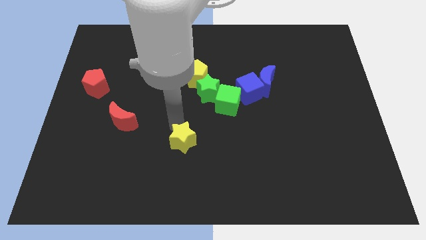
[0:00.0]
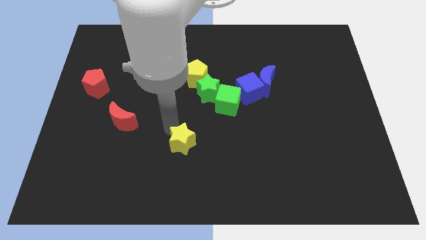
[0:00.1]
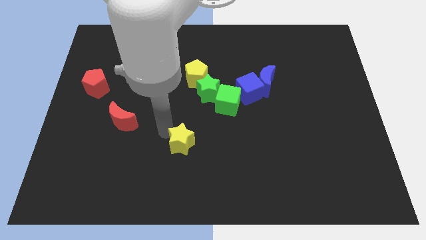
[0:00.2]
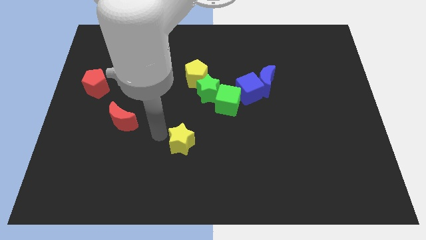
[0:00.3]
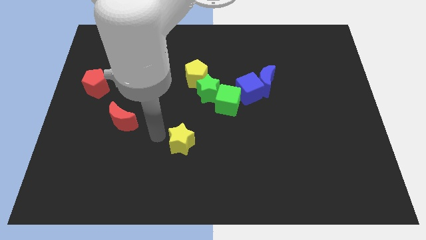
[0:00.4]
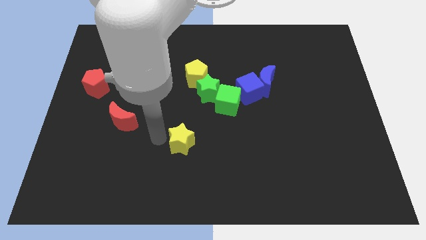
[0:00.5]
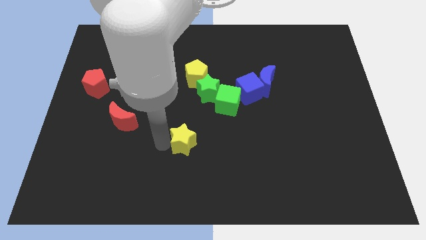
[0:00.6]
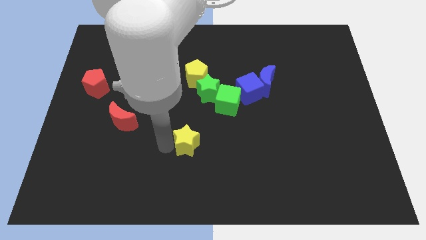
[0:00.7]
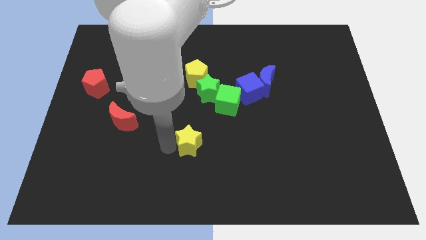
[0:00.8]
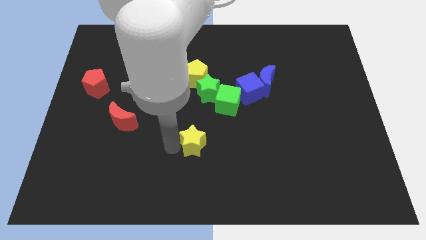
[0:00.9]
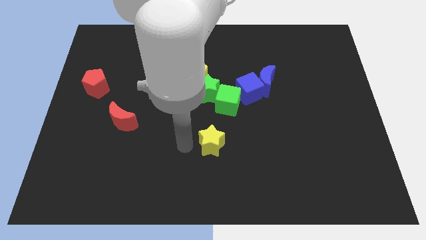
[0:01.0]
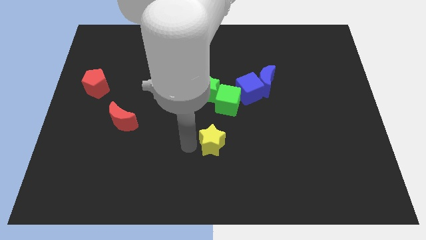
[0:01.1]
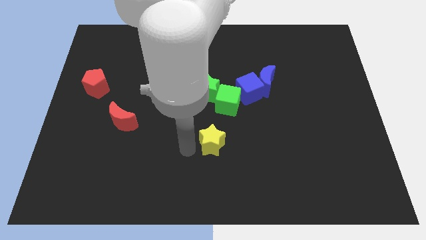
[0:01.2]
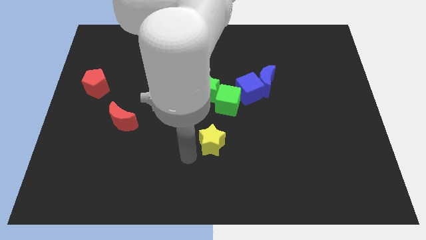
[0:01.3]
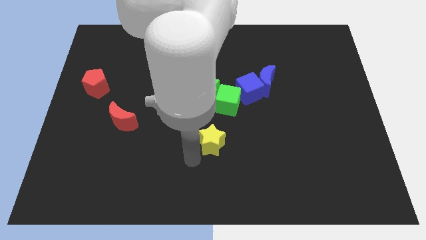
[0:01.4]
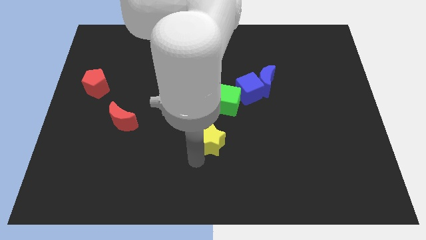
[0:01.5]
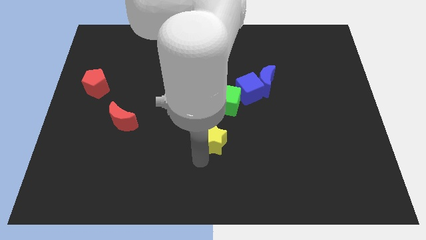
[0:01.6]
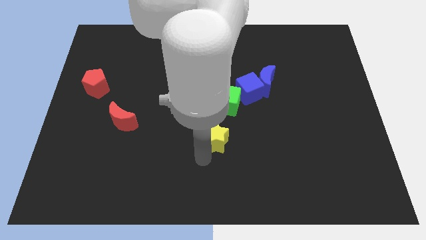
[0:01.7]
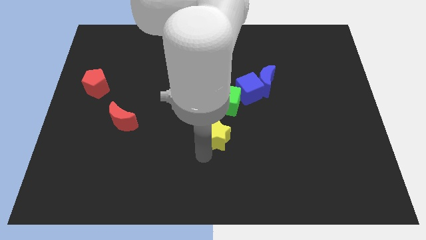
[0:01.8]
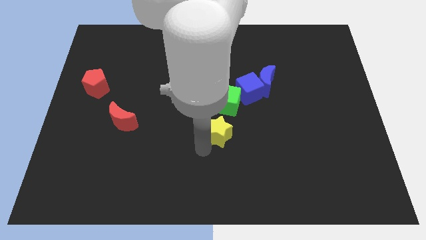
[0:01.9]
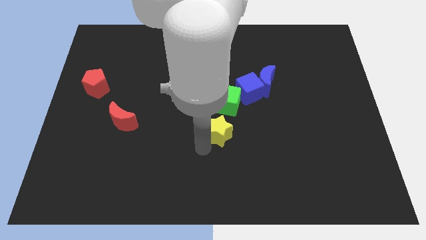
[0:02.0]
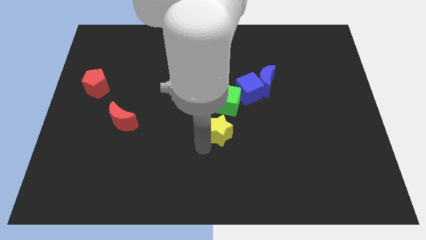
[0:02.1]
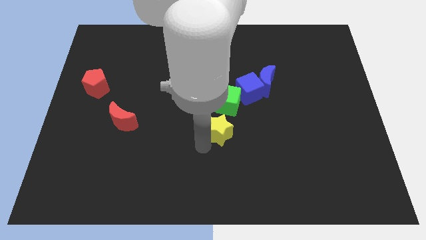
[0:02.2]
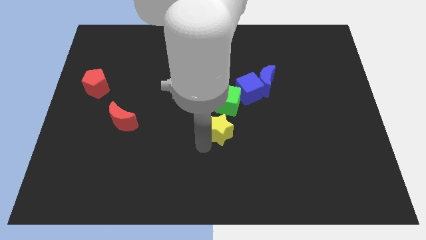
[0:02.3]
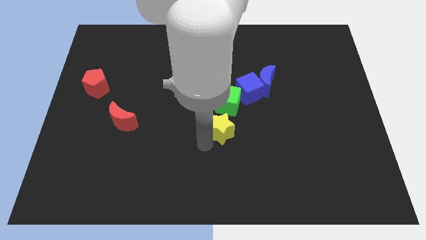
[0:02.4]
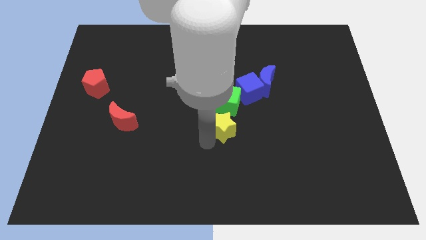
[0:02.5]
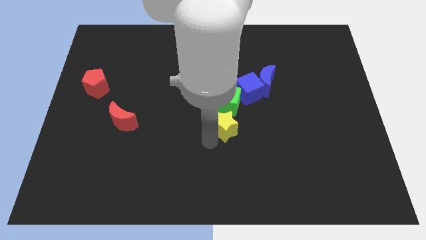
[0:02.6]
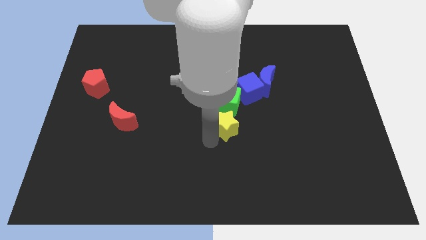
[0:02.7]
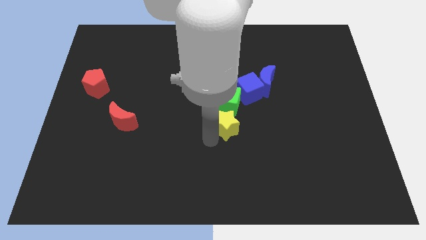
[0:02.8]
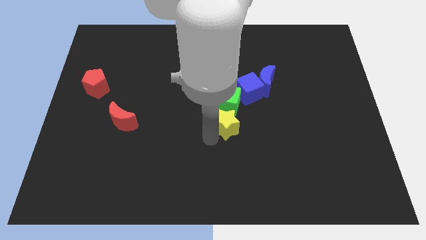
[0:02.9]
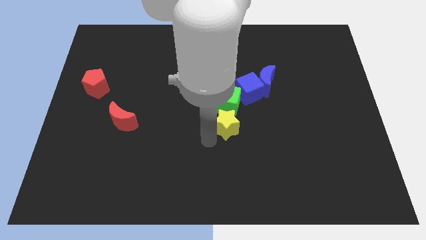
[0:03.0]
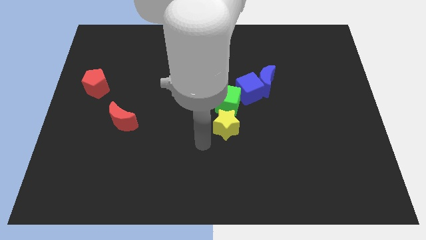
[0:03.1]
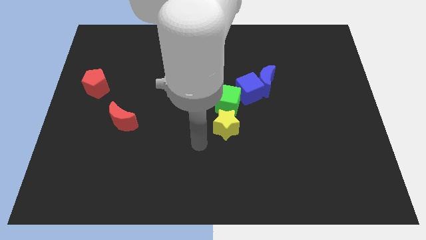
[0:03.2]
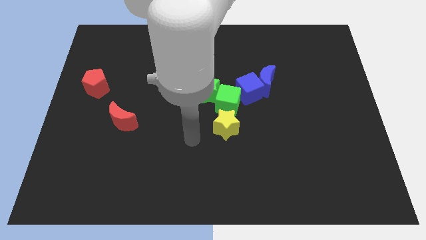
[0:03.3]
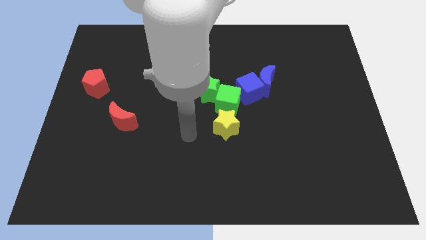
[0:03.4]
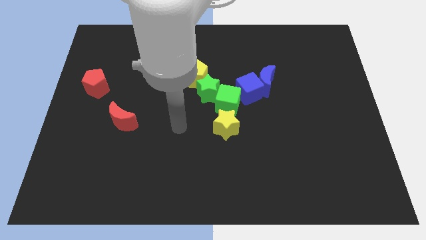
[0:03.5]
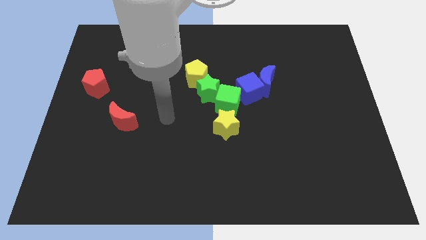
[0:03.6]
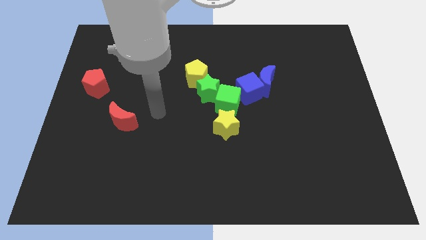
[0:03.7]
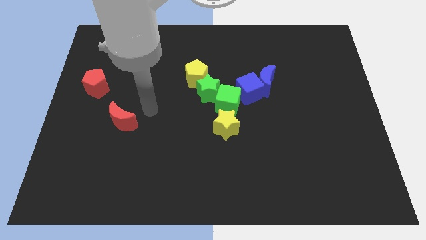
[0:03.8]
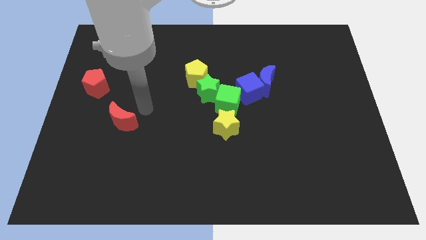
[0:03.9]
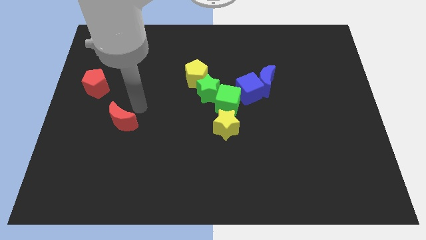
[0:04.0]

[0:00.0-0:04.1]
place yellow star to the bottom of green cube

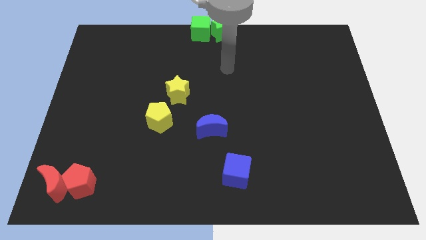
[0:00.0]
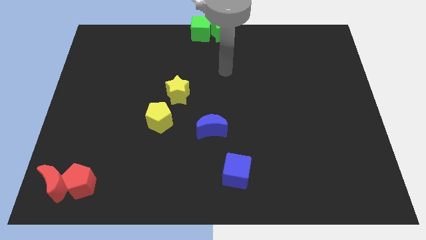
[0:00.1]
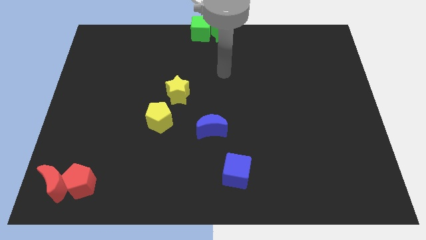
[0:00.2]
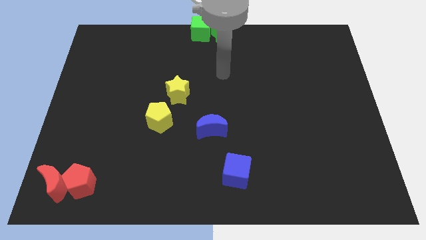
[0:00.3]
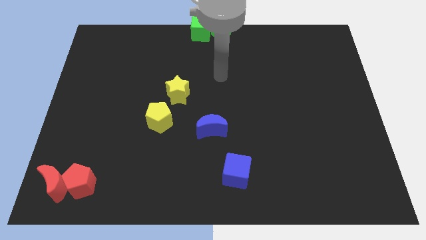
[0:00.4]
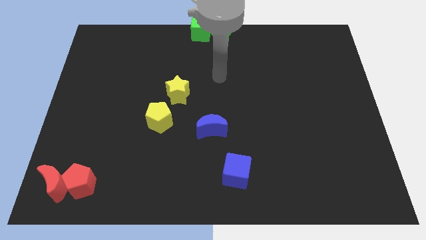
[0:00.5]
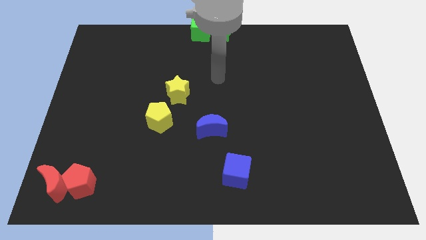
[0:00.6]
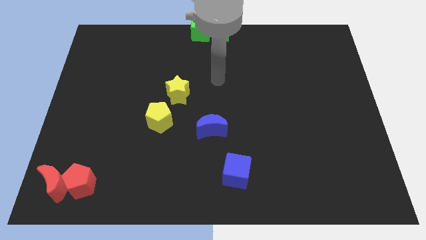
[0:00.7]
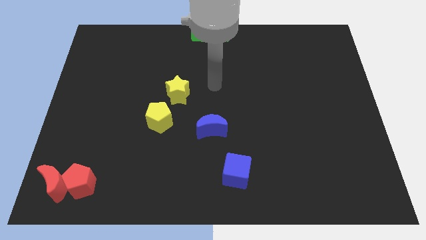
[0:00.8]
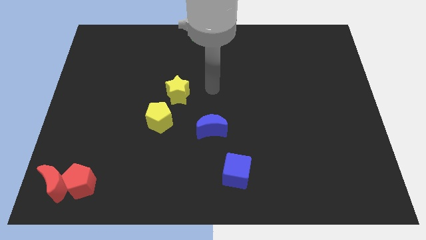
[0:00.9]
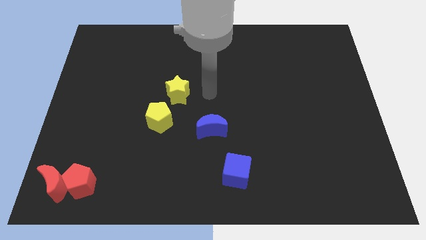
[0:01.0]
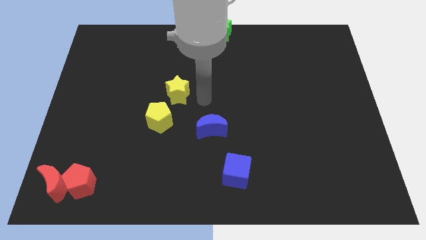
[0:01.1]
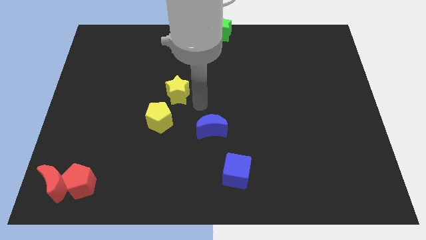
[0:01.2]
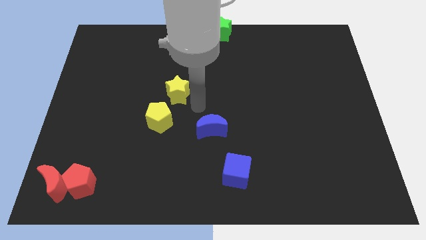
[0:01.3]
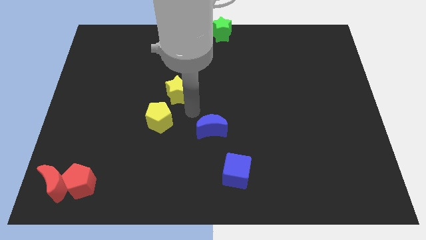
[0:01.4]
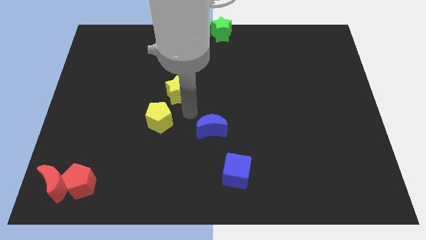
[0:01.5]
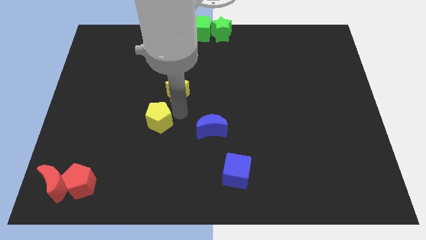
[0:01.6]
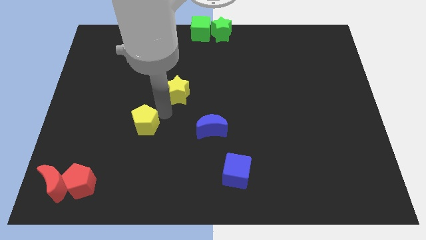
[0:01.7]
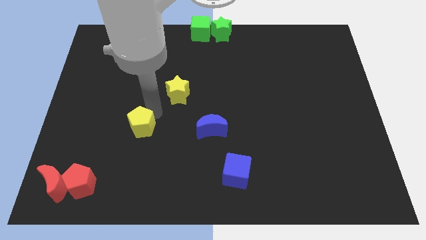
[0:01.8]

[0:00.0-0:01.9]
tap the yellow pentagon

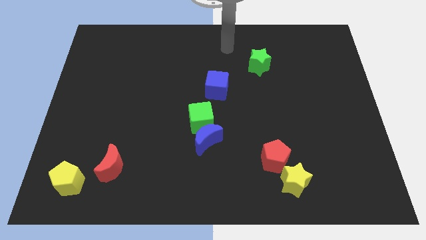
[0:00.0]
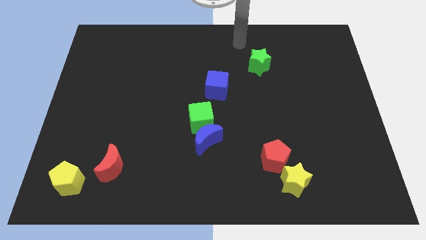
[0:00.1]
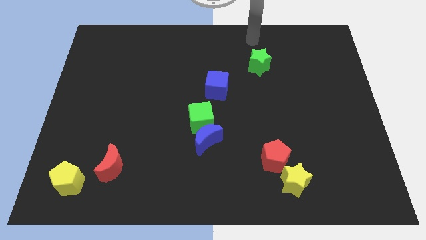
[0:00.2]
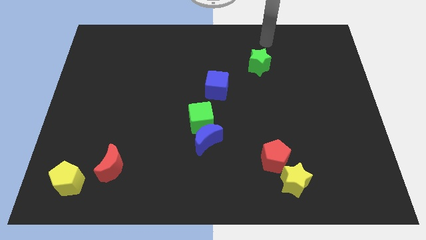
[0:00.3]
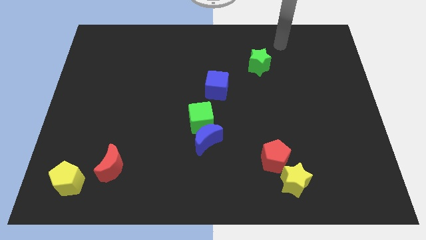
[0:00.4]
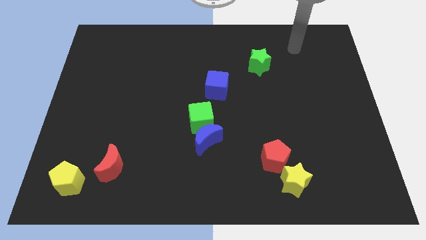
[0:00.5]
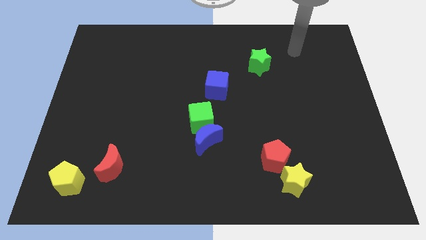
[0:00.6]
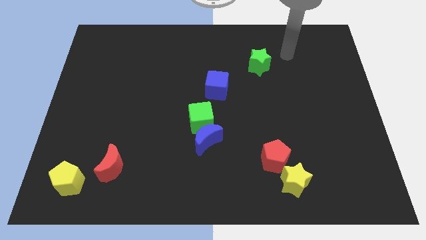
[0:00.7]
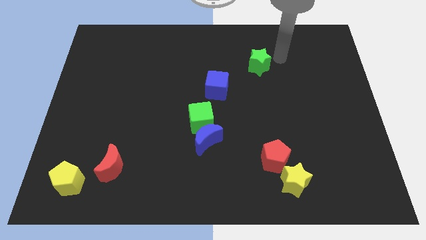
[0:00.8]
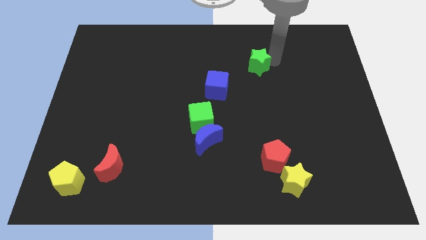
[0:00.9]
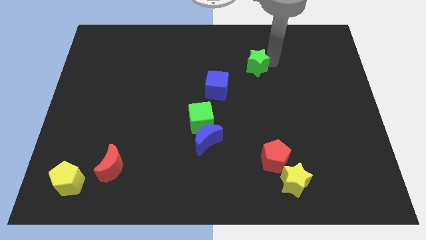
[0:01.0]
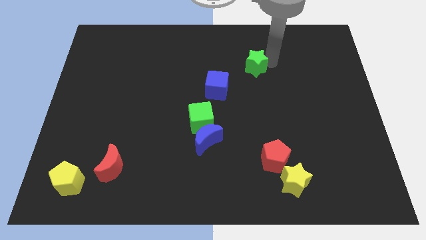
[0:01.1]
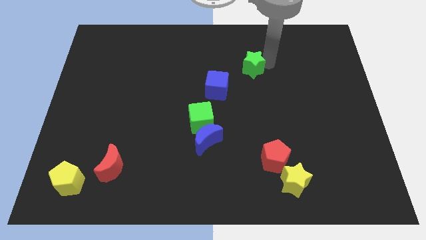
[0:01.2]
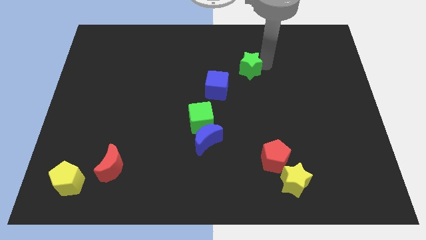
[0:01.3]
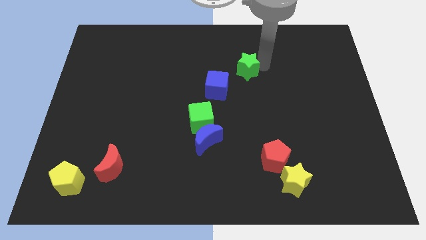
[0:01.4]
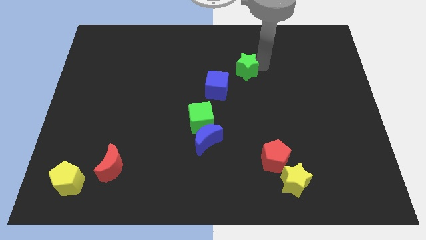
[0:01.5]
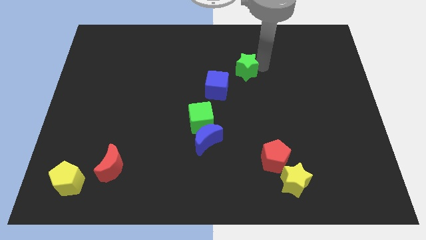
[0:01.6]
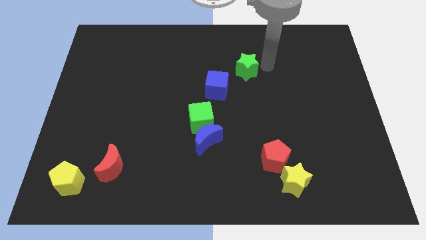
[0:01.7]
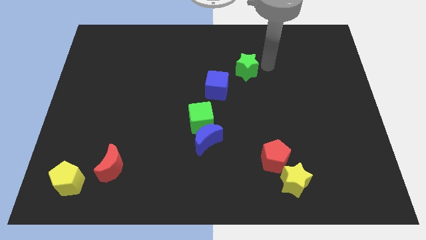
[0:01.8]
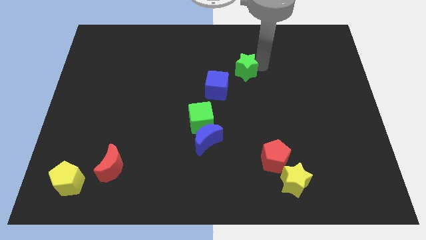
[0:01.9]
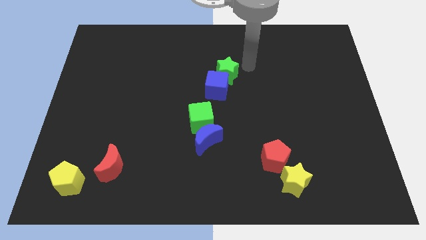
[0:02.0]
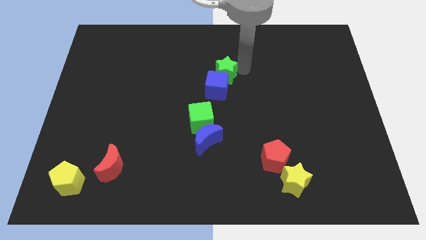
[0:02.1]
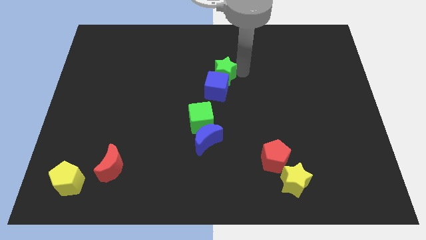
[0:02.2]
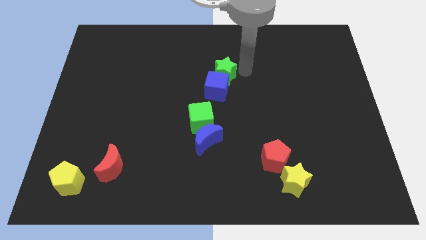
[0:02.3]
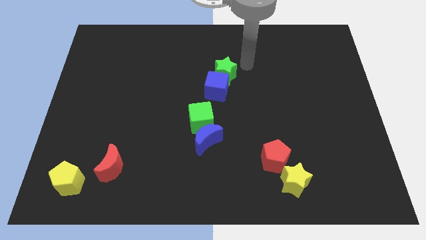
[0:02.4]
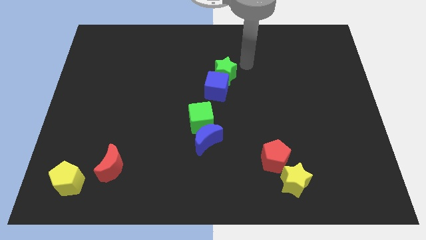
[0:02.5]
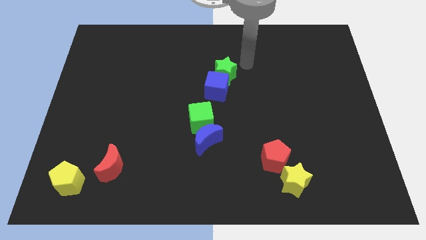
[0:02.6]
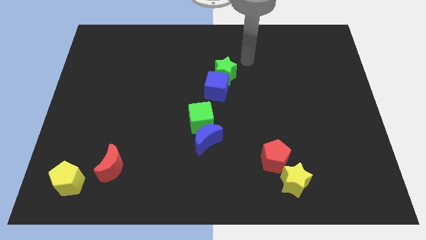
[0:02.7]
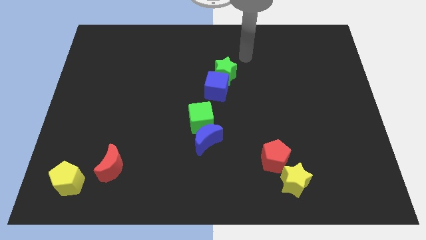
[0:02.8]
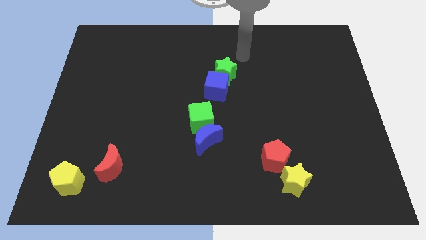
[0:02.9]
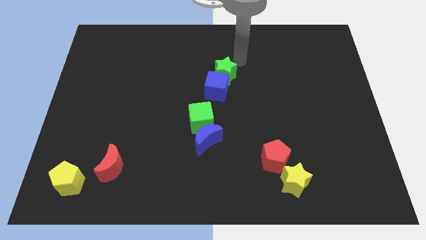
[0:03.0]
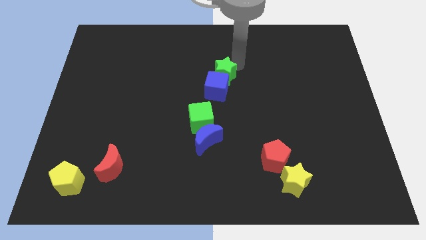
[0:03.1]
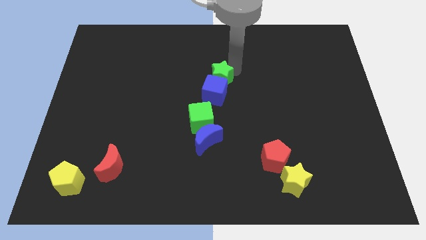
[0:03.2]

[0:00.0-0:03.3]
move green star to the top of blue cube
